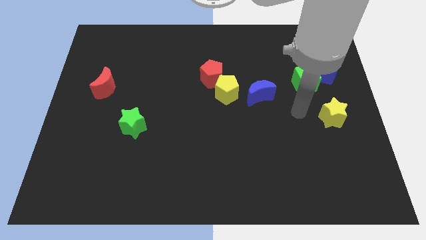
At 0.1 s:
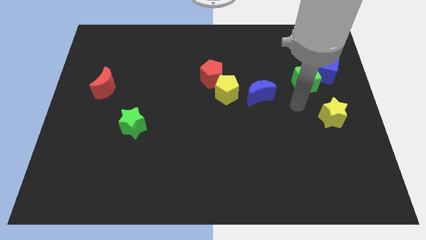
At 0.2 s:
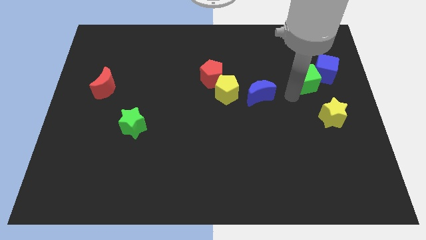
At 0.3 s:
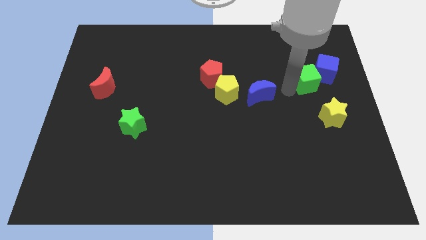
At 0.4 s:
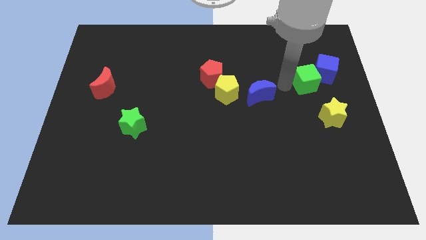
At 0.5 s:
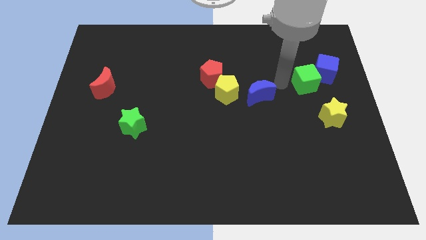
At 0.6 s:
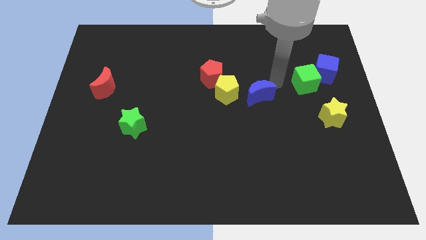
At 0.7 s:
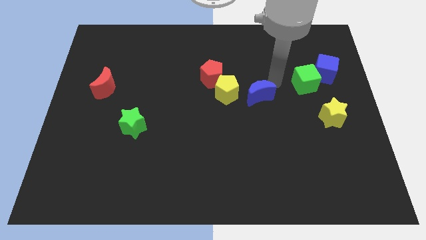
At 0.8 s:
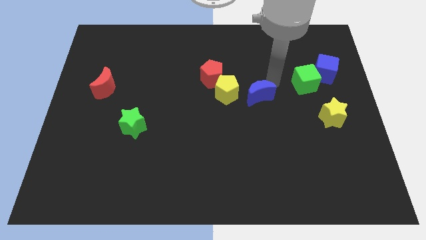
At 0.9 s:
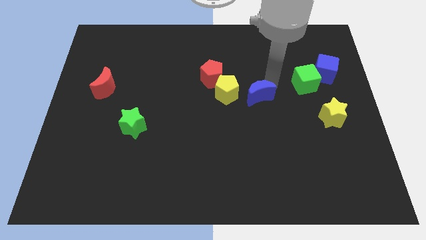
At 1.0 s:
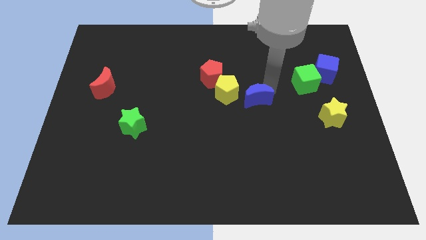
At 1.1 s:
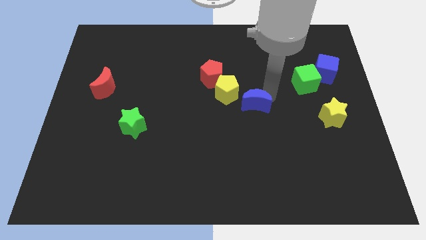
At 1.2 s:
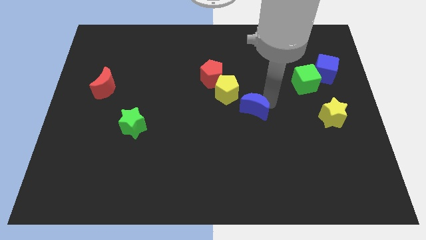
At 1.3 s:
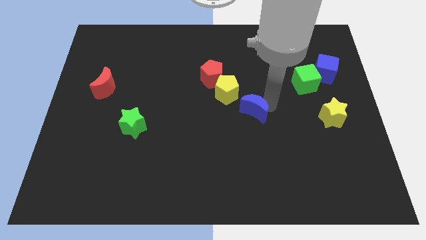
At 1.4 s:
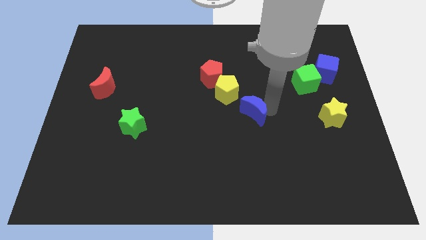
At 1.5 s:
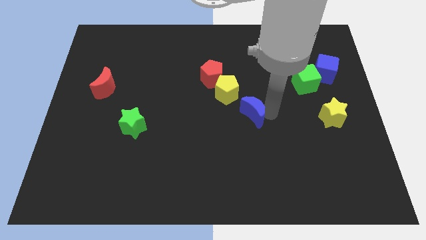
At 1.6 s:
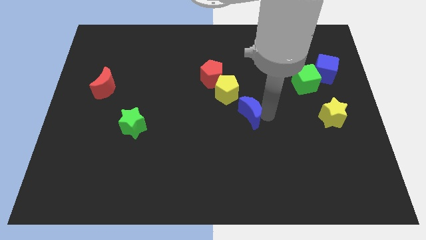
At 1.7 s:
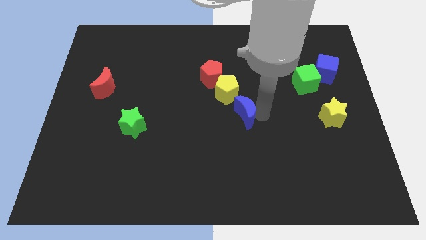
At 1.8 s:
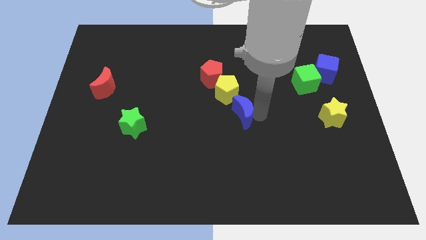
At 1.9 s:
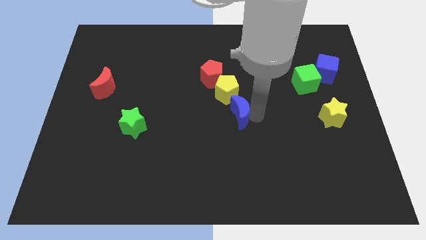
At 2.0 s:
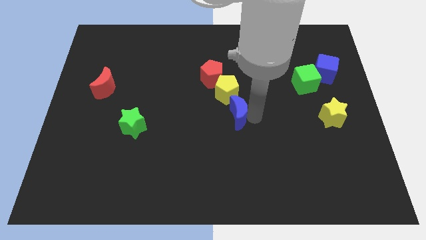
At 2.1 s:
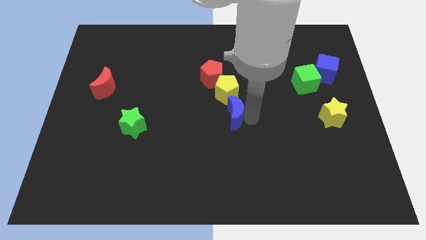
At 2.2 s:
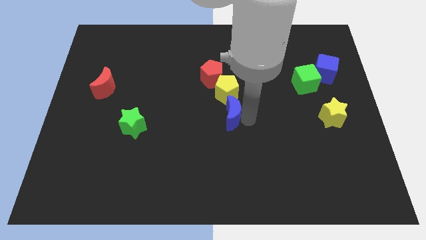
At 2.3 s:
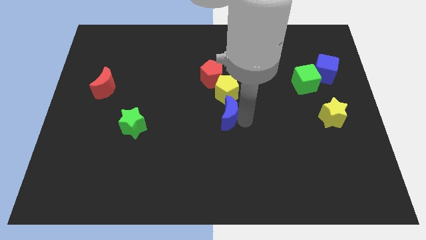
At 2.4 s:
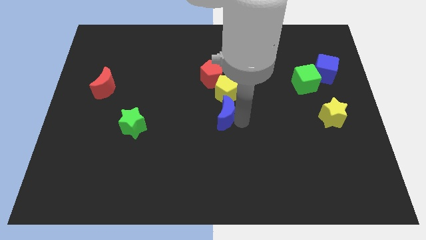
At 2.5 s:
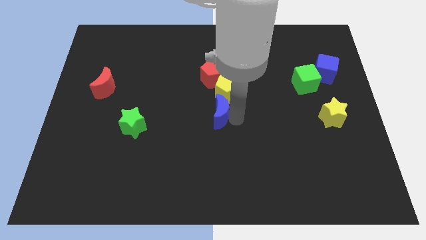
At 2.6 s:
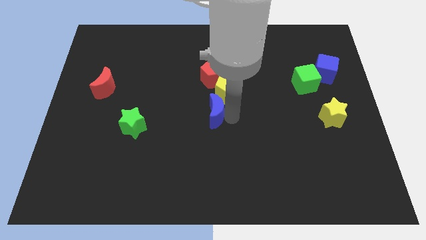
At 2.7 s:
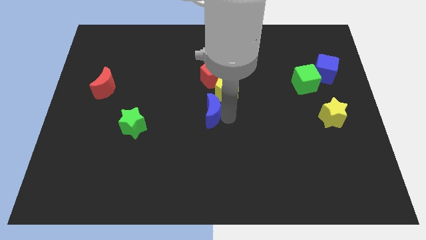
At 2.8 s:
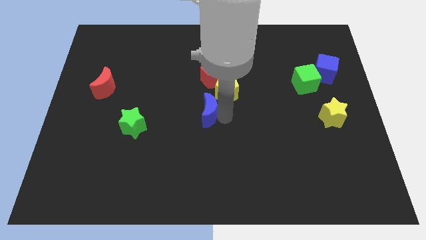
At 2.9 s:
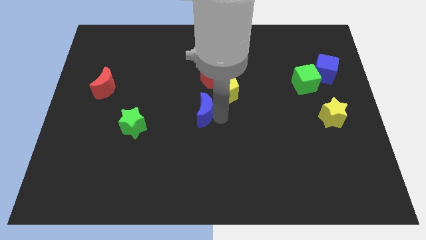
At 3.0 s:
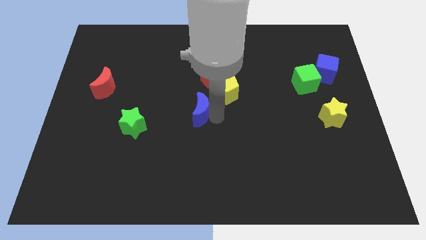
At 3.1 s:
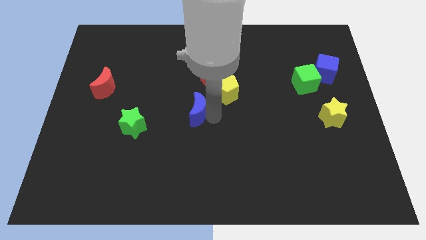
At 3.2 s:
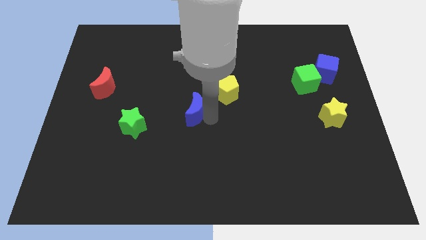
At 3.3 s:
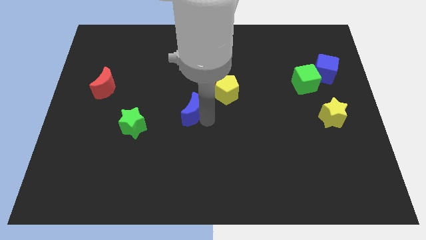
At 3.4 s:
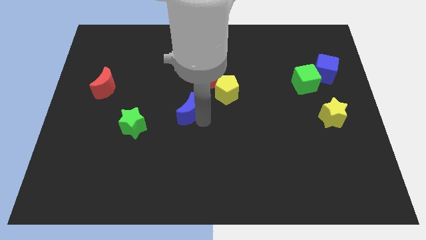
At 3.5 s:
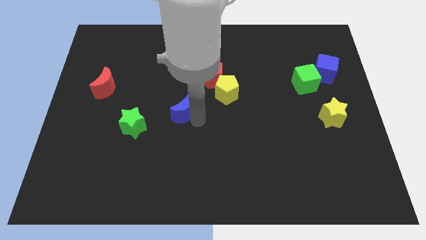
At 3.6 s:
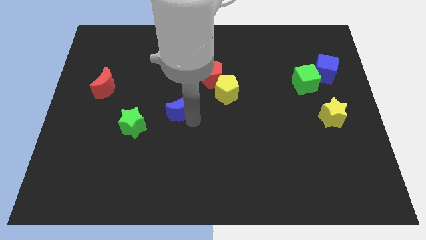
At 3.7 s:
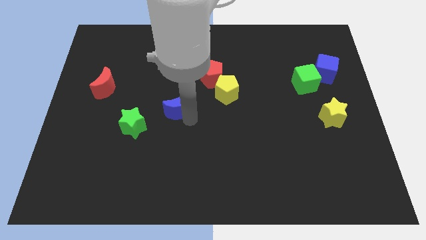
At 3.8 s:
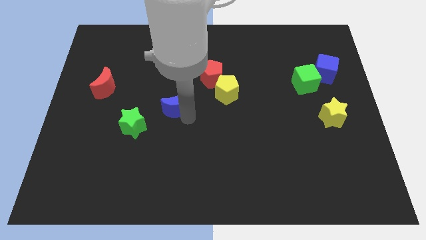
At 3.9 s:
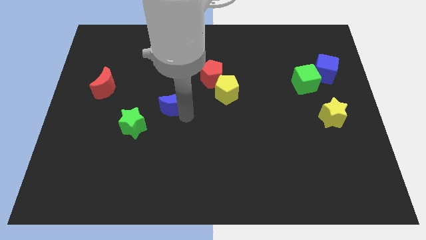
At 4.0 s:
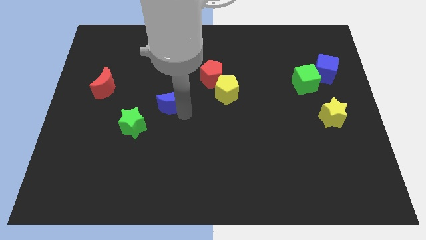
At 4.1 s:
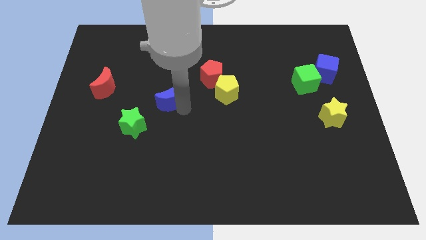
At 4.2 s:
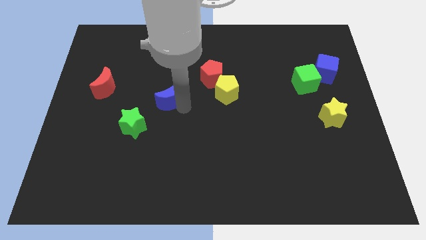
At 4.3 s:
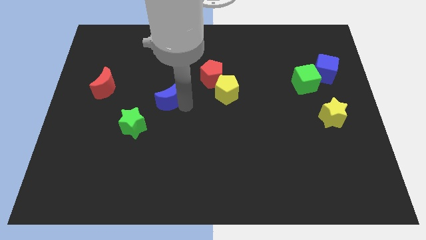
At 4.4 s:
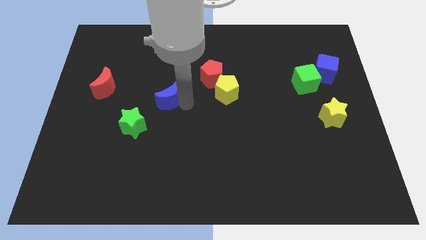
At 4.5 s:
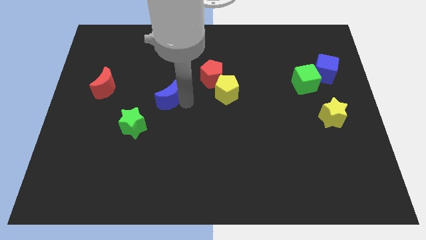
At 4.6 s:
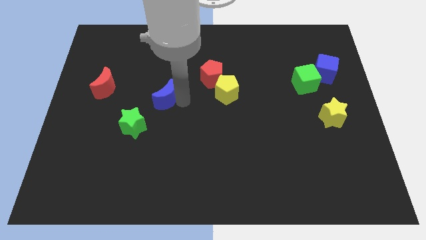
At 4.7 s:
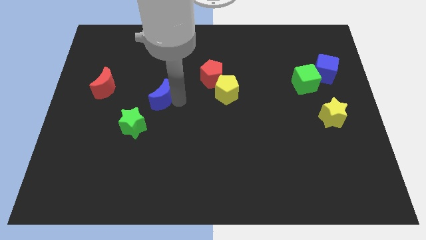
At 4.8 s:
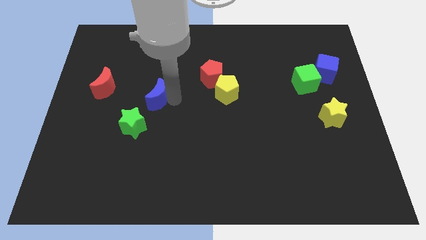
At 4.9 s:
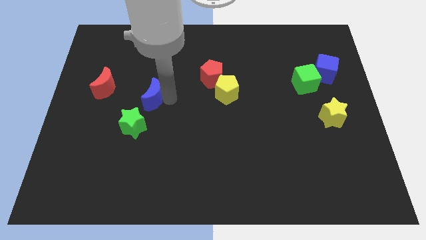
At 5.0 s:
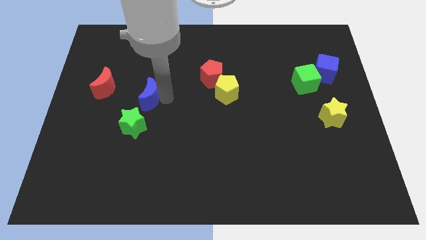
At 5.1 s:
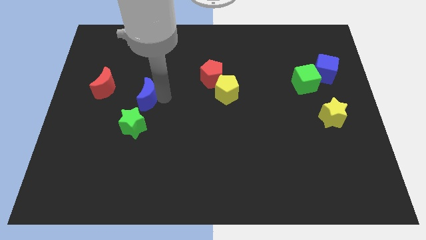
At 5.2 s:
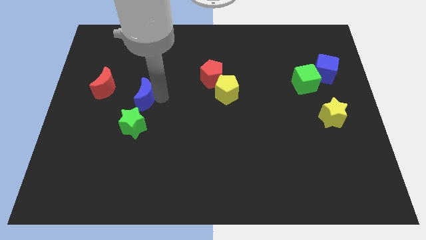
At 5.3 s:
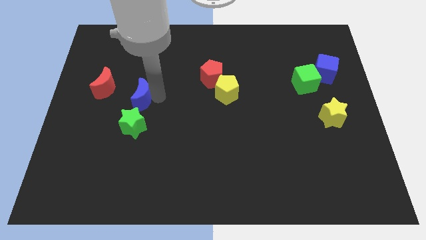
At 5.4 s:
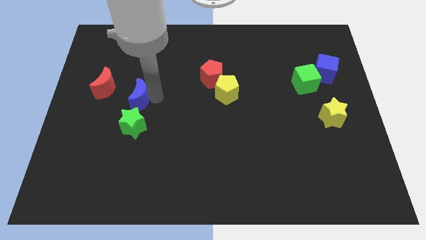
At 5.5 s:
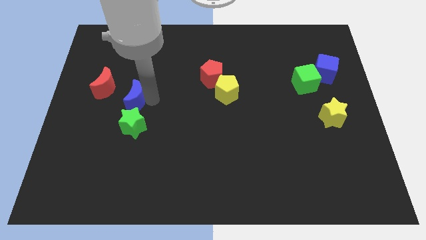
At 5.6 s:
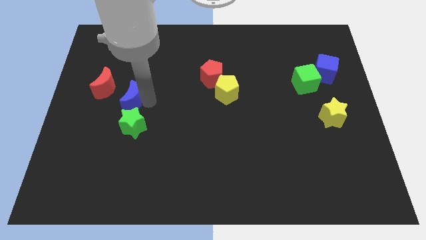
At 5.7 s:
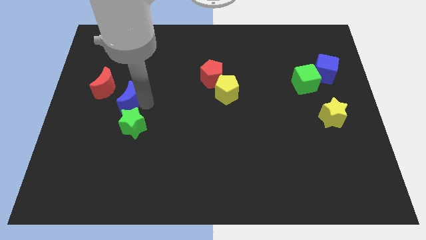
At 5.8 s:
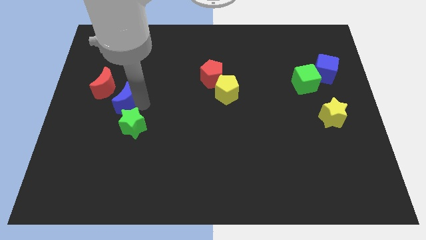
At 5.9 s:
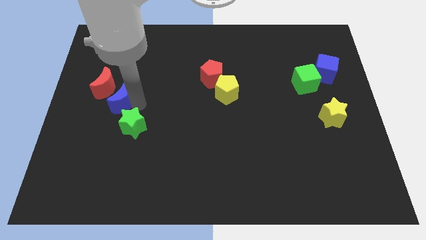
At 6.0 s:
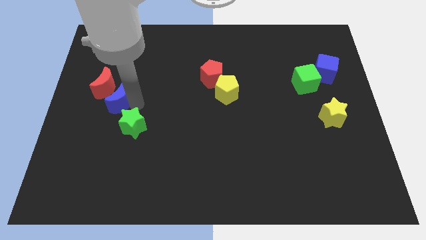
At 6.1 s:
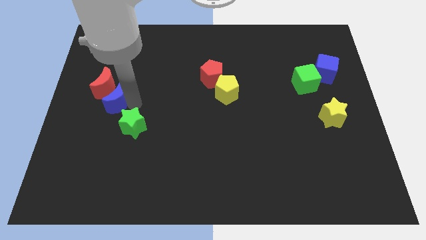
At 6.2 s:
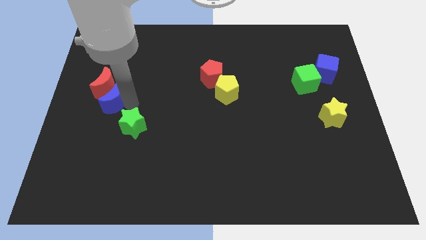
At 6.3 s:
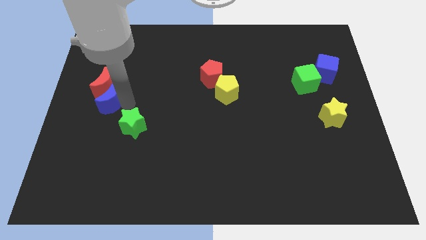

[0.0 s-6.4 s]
slide the blue moon next to the red moon

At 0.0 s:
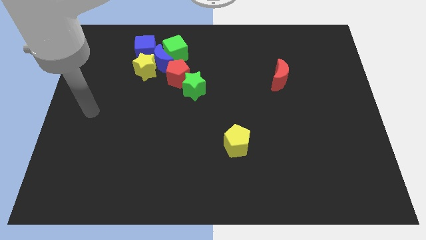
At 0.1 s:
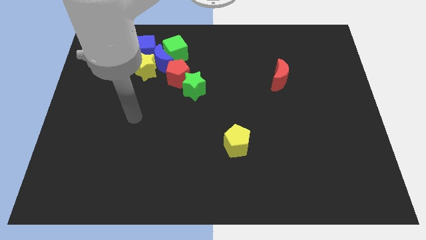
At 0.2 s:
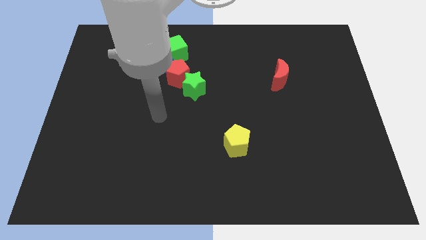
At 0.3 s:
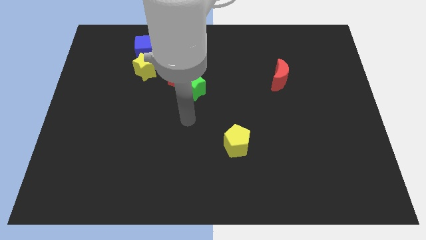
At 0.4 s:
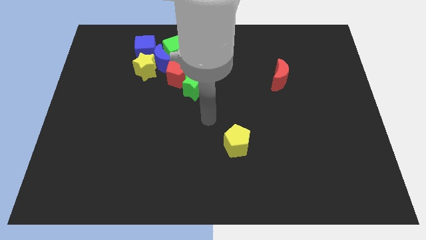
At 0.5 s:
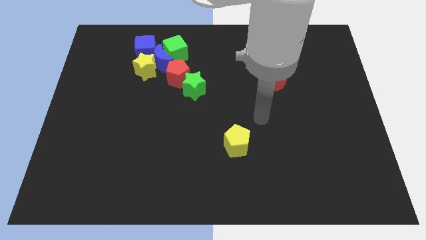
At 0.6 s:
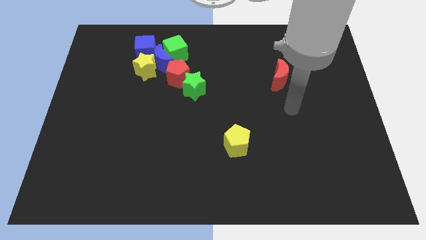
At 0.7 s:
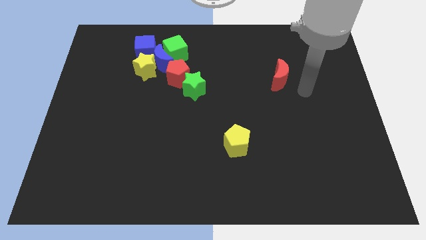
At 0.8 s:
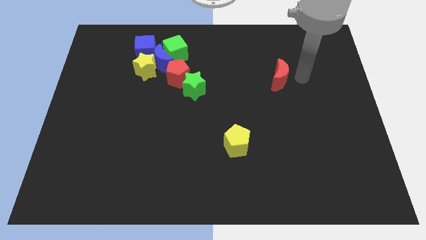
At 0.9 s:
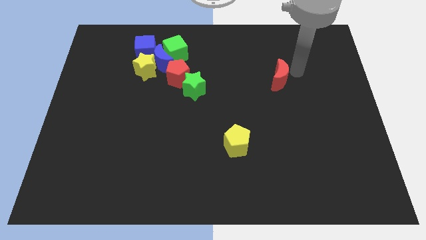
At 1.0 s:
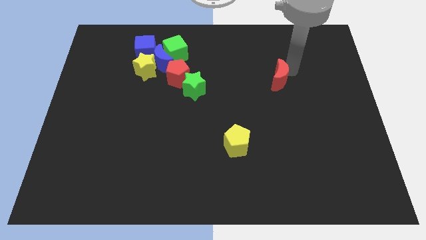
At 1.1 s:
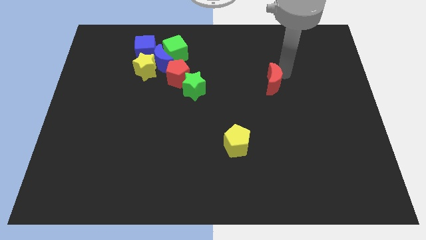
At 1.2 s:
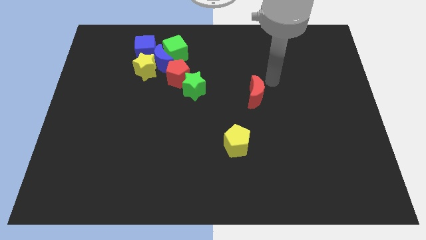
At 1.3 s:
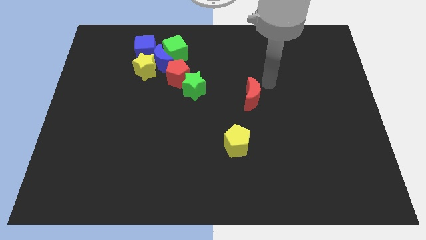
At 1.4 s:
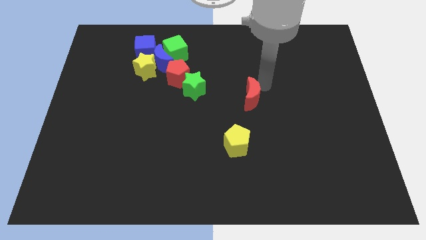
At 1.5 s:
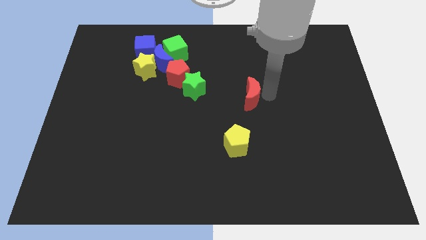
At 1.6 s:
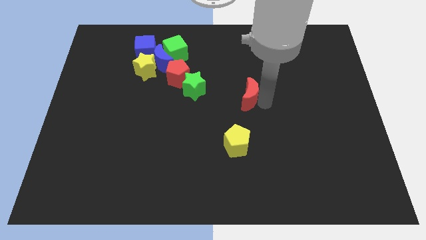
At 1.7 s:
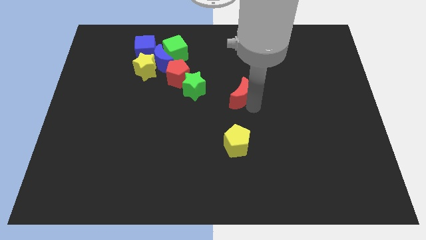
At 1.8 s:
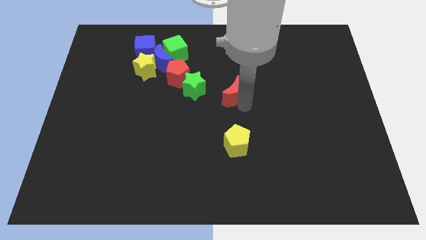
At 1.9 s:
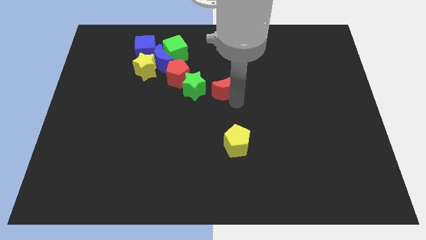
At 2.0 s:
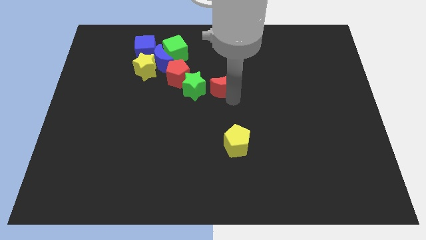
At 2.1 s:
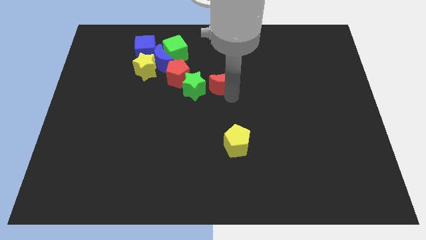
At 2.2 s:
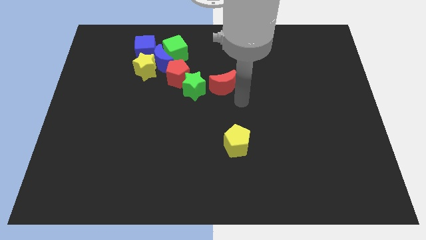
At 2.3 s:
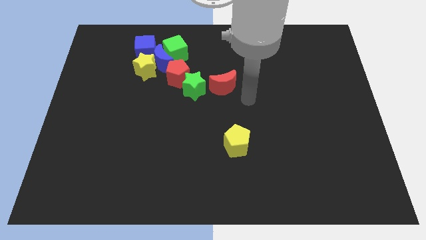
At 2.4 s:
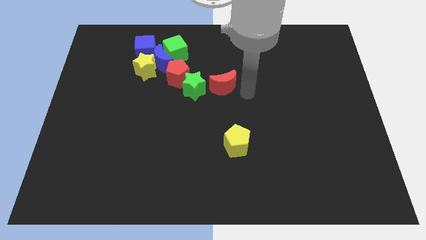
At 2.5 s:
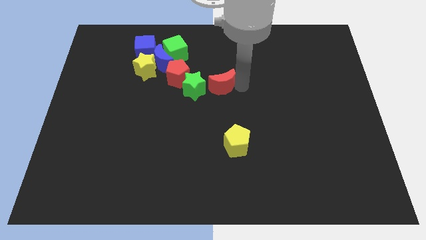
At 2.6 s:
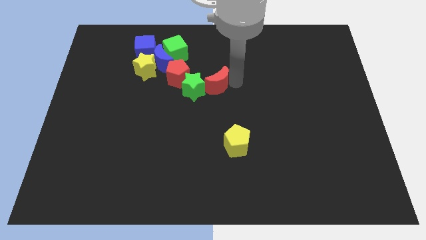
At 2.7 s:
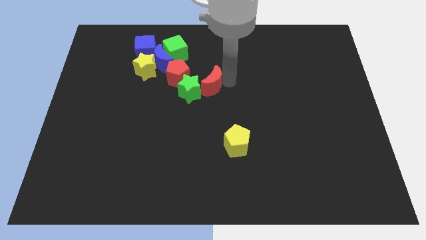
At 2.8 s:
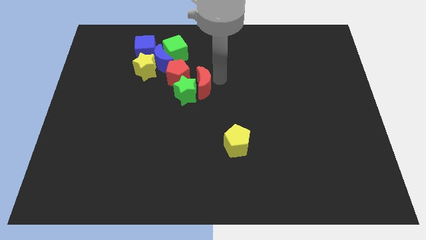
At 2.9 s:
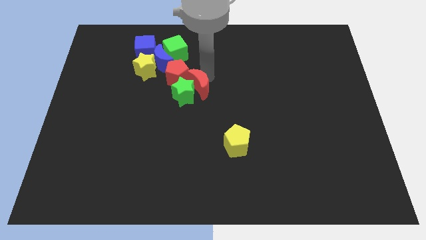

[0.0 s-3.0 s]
push the red moon next to the green star
